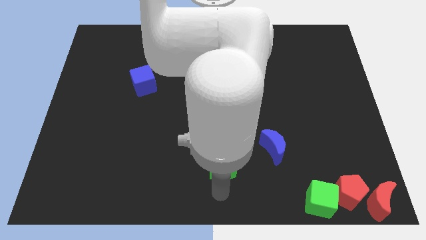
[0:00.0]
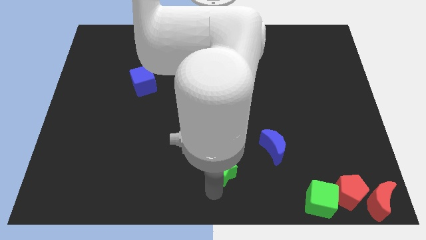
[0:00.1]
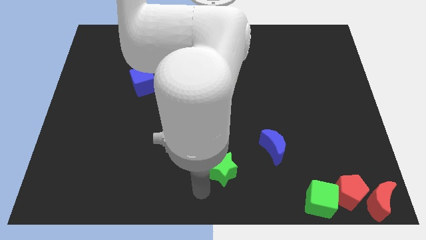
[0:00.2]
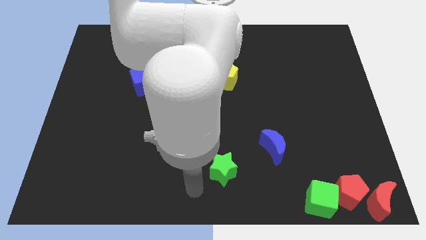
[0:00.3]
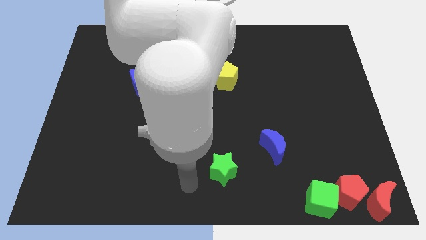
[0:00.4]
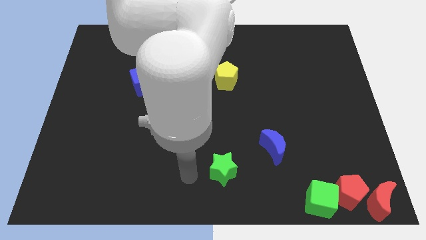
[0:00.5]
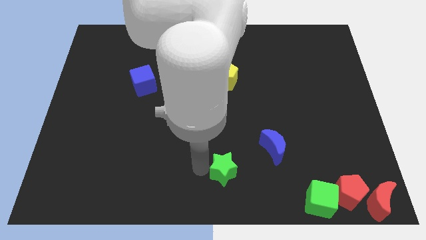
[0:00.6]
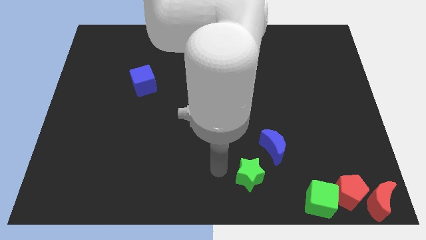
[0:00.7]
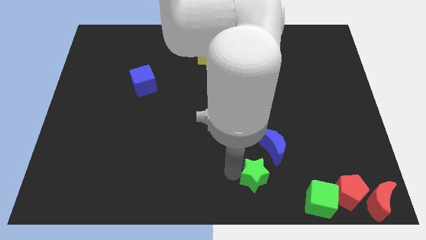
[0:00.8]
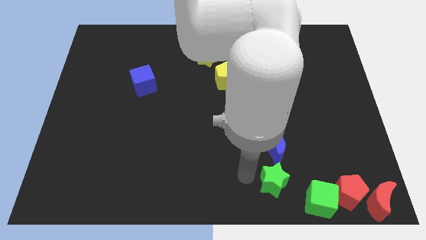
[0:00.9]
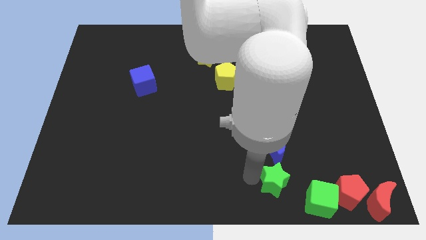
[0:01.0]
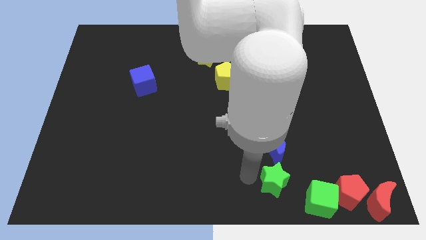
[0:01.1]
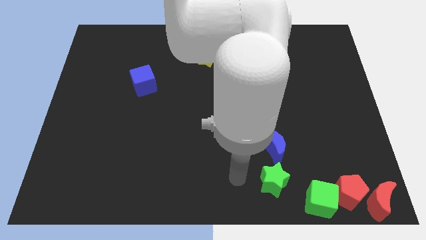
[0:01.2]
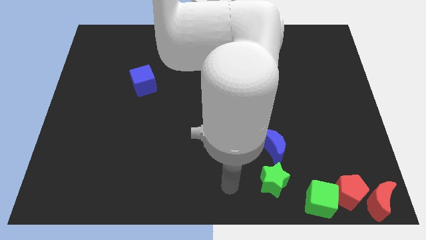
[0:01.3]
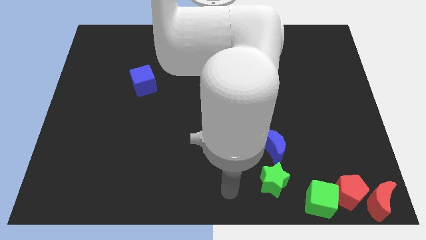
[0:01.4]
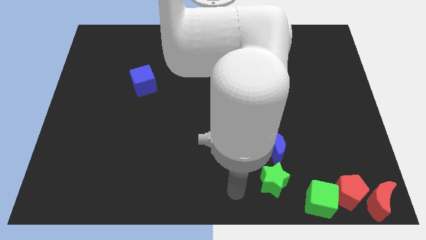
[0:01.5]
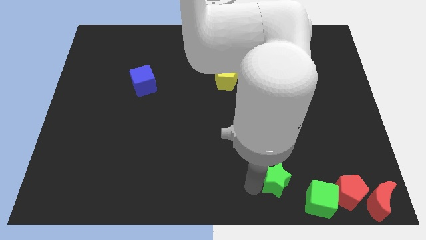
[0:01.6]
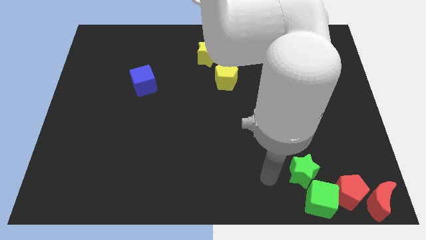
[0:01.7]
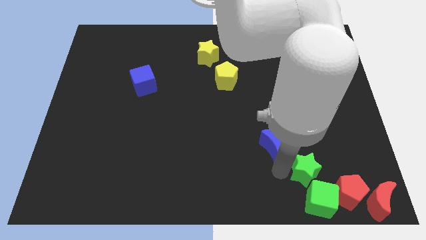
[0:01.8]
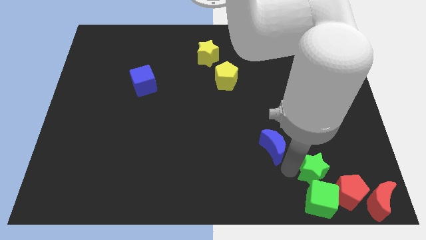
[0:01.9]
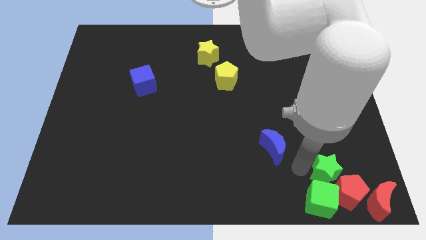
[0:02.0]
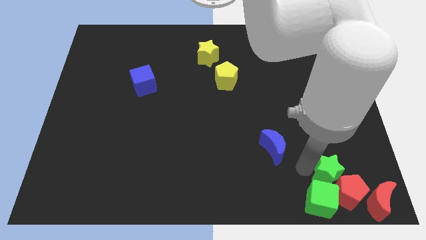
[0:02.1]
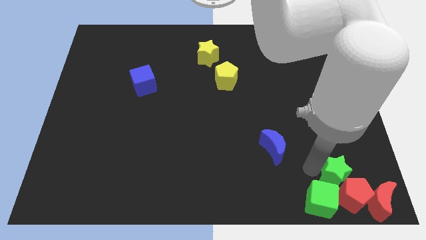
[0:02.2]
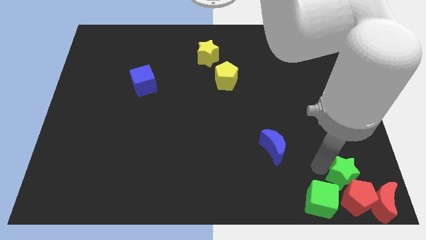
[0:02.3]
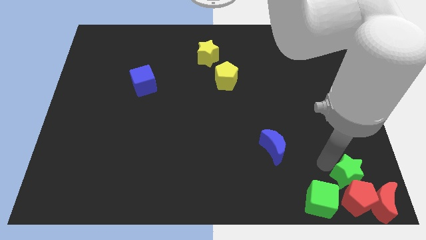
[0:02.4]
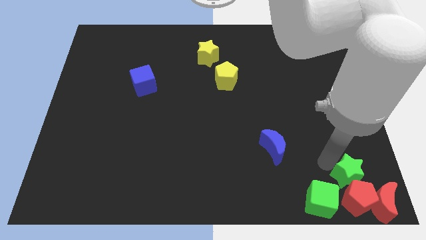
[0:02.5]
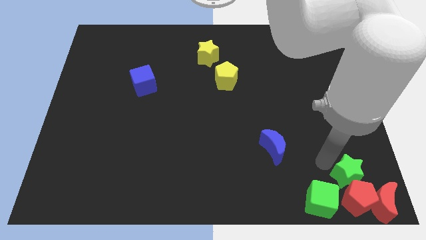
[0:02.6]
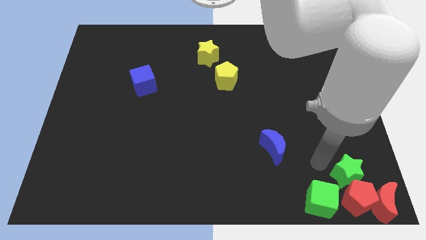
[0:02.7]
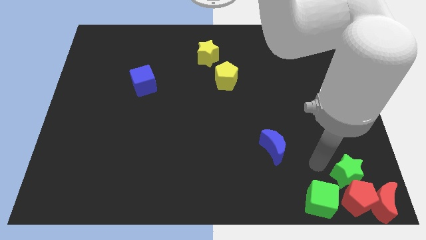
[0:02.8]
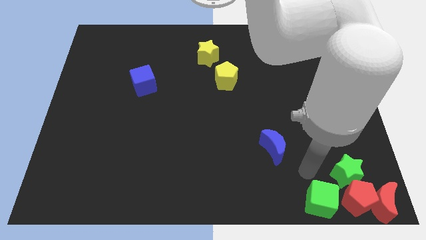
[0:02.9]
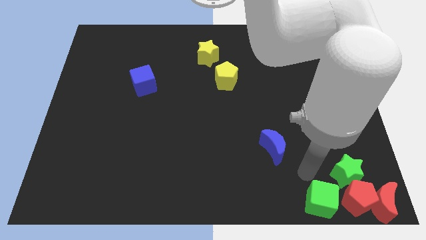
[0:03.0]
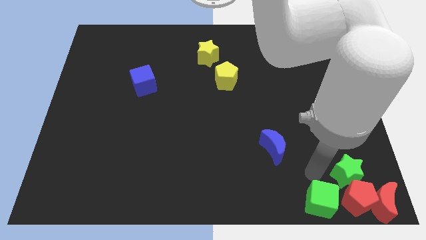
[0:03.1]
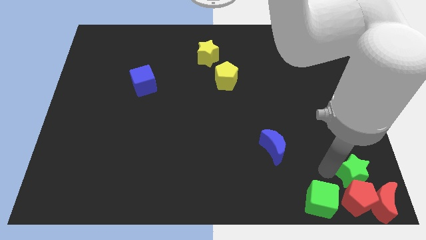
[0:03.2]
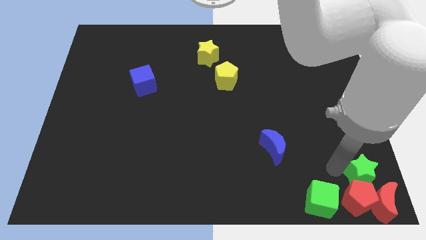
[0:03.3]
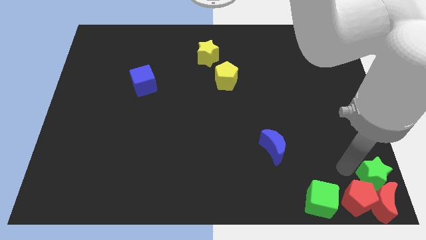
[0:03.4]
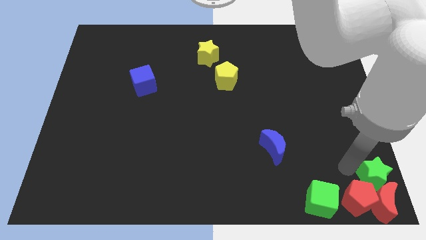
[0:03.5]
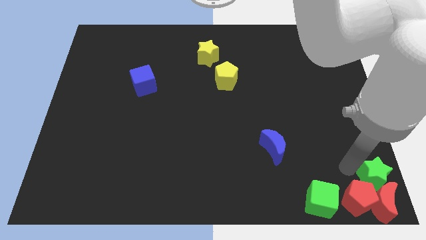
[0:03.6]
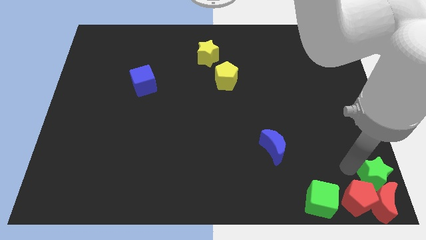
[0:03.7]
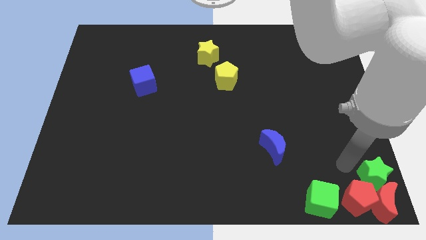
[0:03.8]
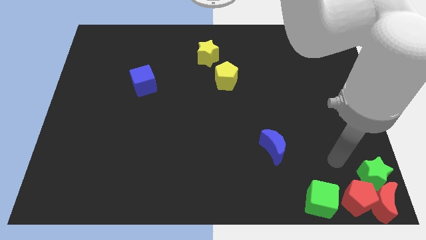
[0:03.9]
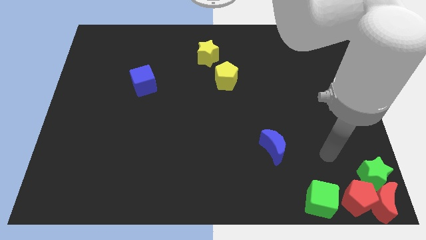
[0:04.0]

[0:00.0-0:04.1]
move the green star to the top of the red blocks

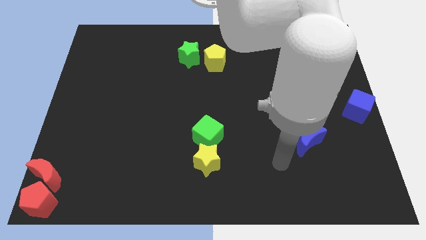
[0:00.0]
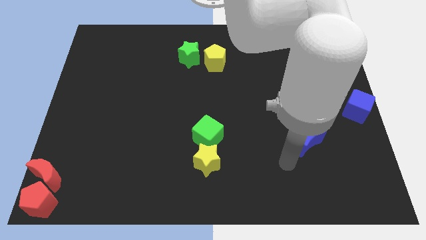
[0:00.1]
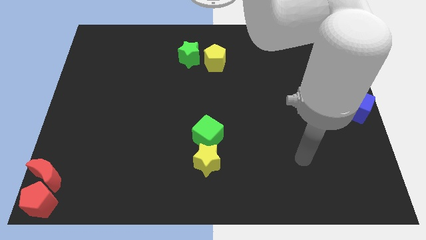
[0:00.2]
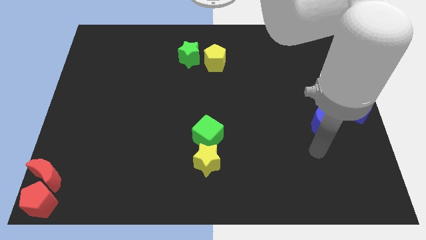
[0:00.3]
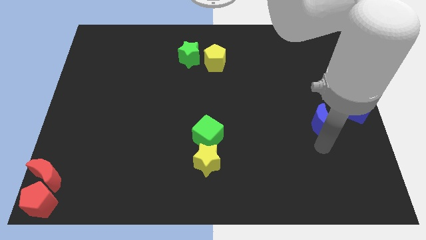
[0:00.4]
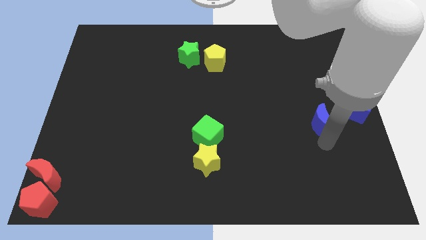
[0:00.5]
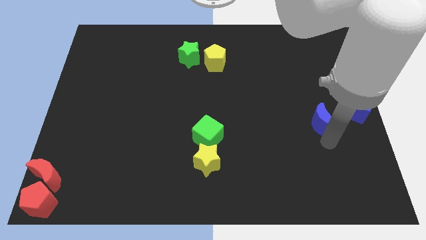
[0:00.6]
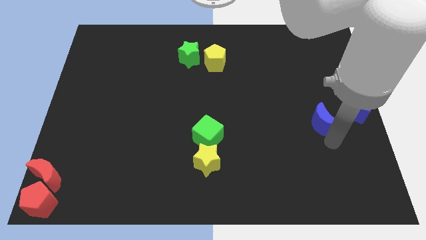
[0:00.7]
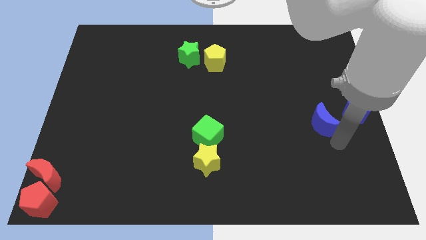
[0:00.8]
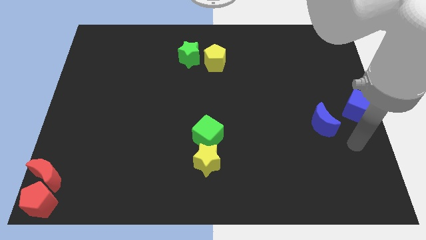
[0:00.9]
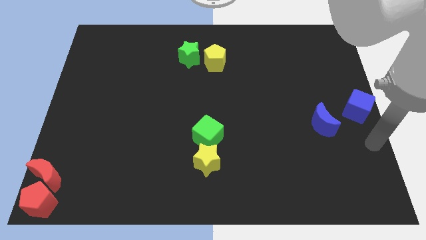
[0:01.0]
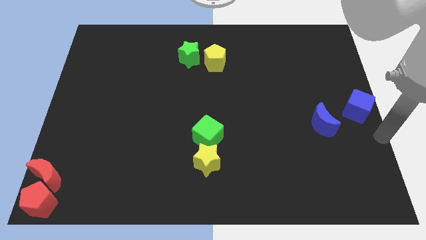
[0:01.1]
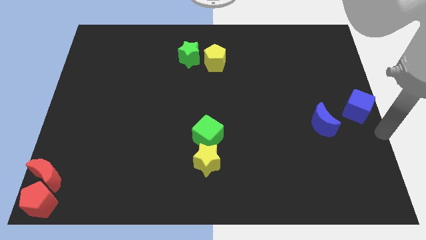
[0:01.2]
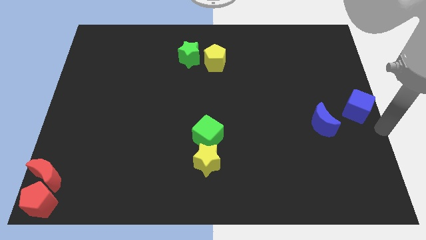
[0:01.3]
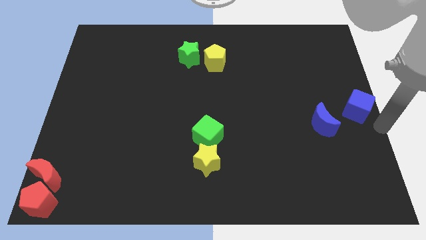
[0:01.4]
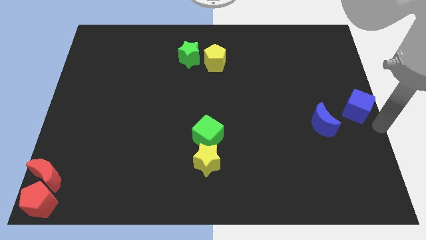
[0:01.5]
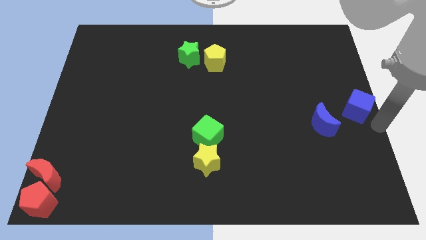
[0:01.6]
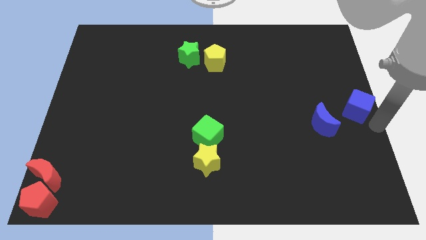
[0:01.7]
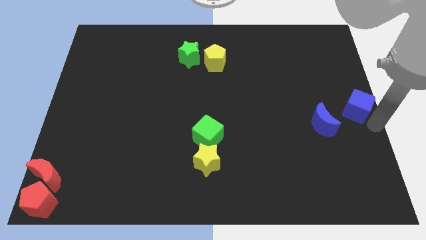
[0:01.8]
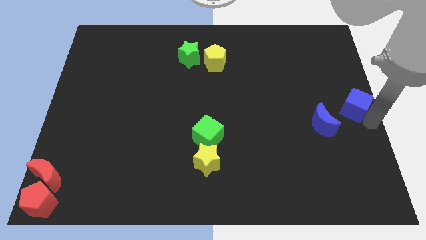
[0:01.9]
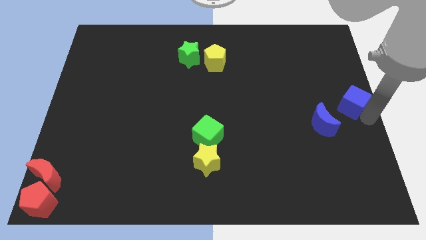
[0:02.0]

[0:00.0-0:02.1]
slightly move the blue crescent and blue cube towards top

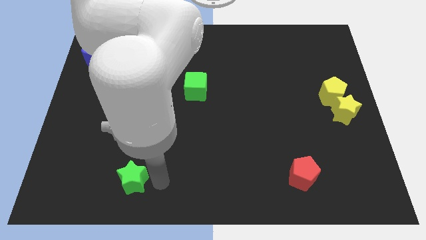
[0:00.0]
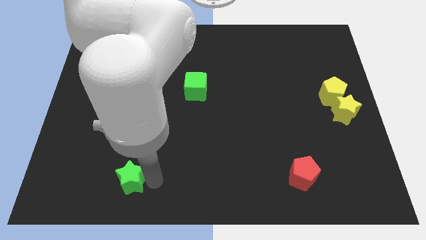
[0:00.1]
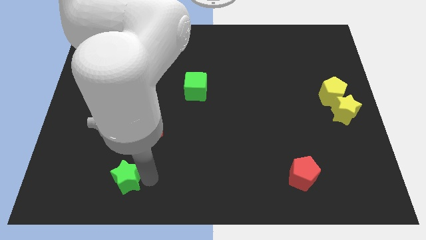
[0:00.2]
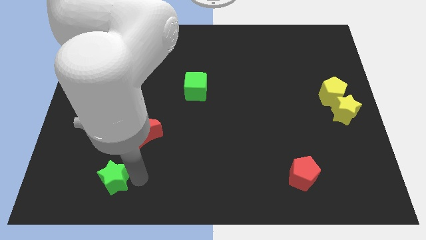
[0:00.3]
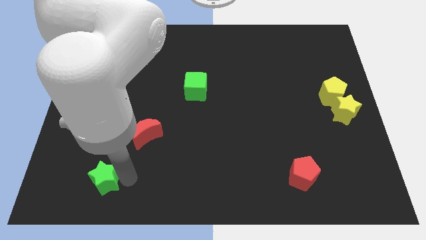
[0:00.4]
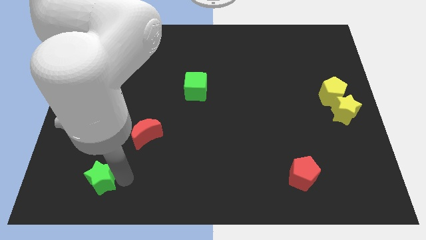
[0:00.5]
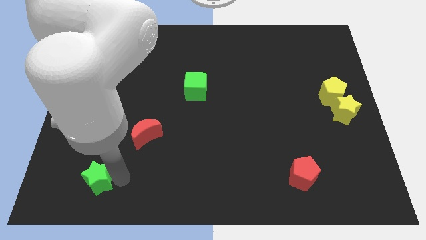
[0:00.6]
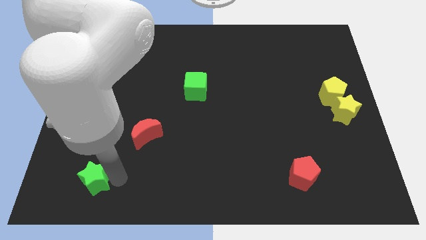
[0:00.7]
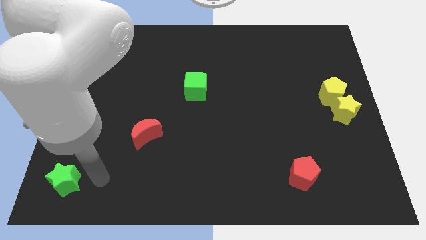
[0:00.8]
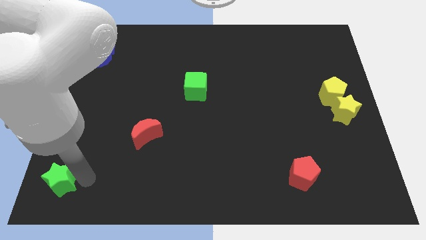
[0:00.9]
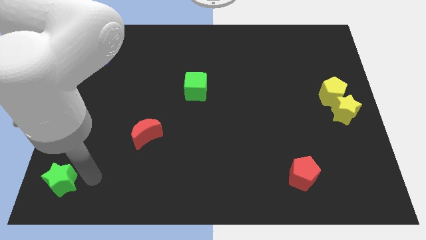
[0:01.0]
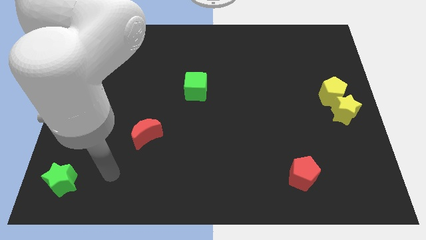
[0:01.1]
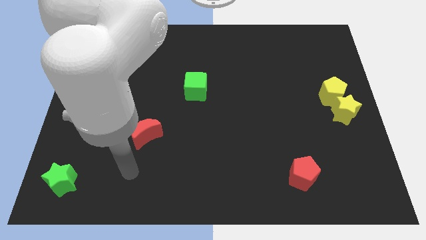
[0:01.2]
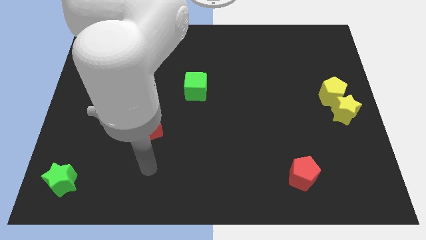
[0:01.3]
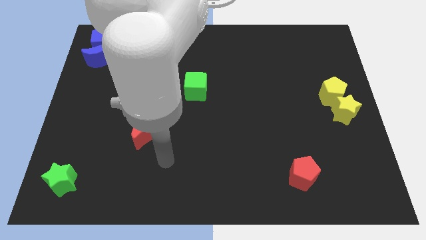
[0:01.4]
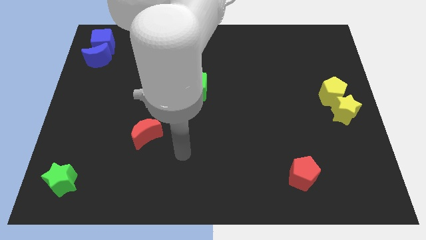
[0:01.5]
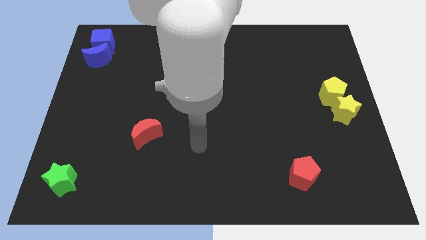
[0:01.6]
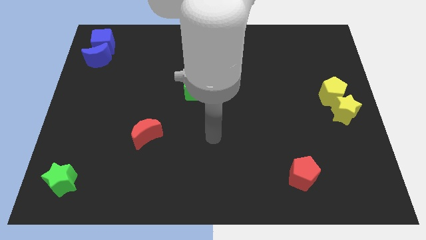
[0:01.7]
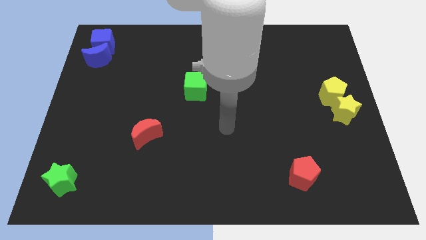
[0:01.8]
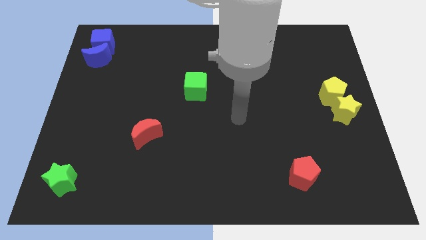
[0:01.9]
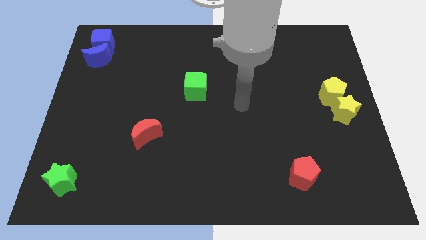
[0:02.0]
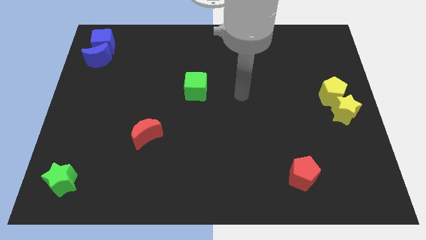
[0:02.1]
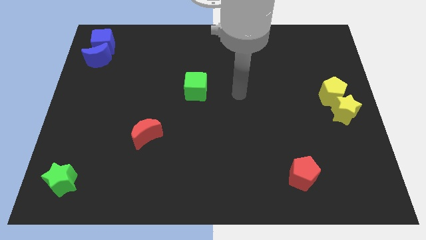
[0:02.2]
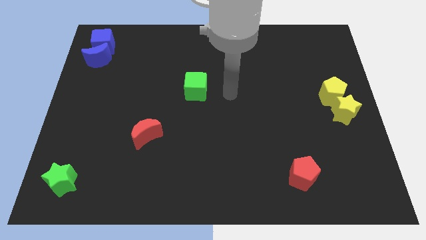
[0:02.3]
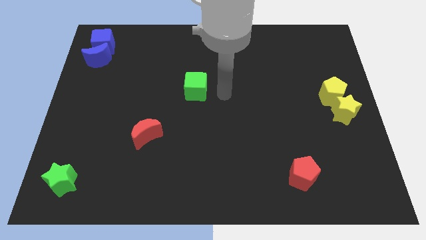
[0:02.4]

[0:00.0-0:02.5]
move the green star to the bottom left vertically to the blue crescent

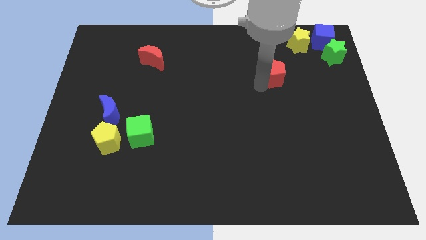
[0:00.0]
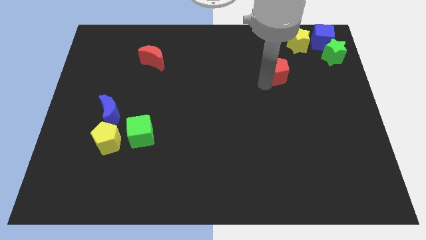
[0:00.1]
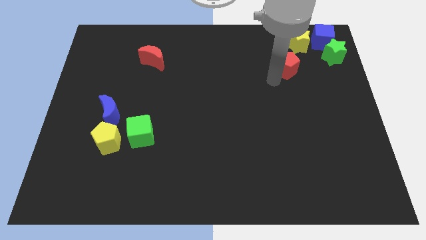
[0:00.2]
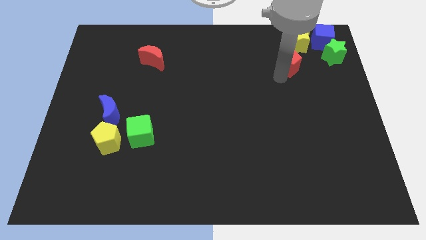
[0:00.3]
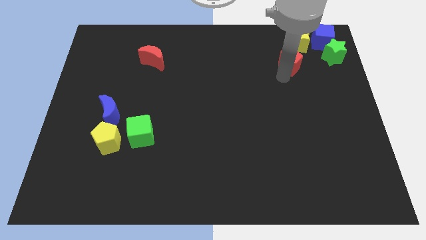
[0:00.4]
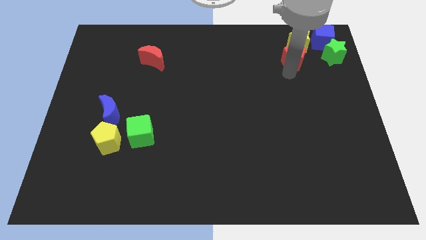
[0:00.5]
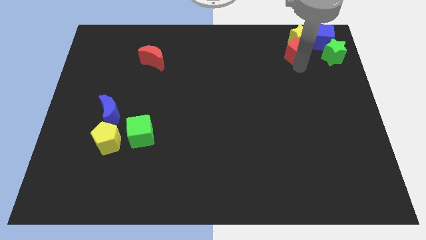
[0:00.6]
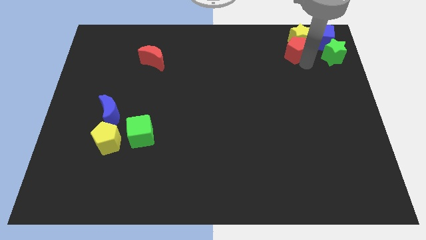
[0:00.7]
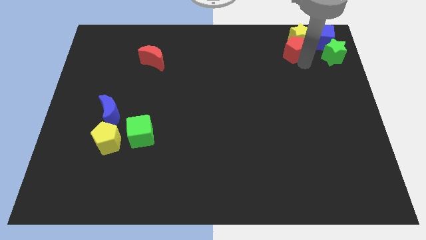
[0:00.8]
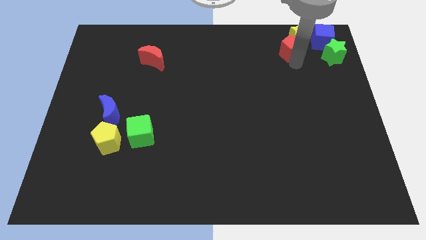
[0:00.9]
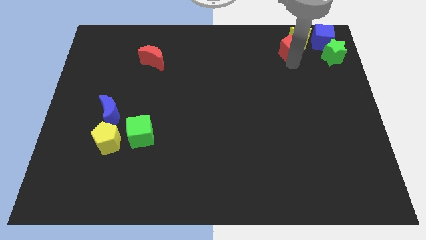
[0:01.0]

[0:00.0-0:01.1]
push the red pentagon into the yellow star
